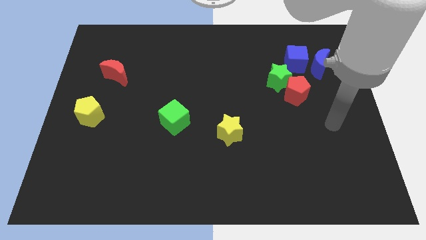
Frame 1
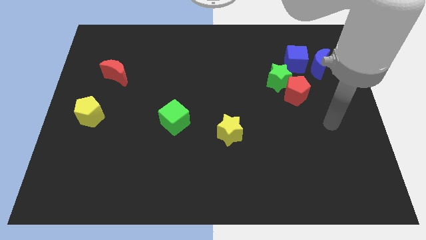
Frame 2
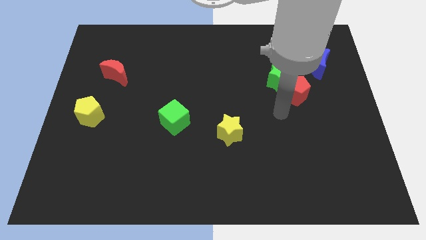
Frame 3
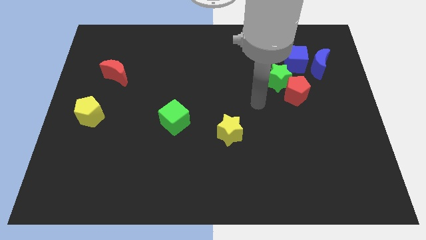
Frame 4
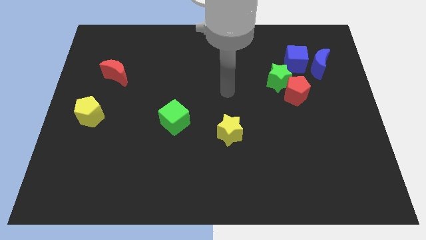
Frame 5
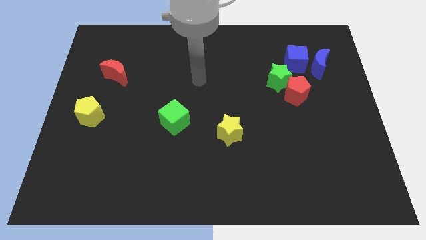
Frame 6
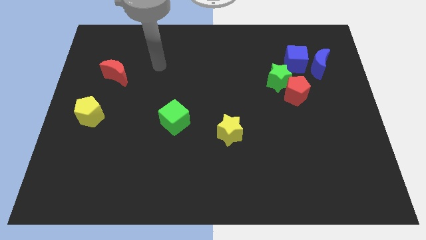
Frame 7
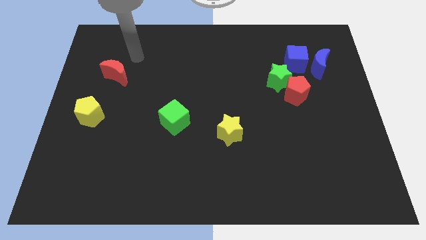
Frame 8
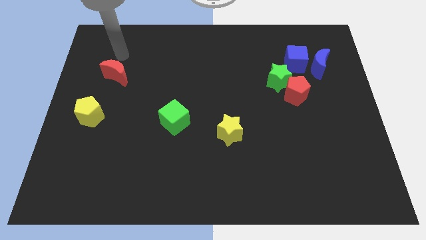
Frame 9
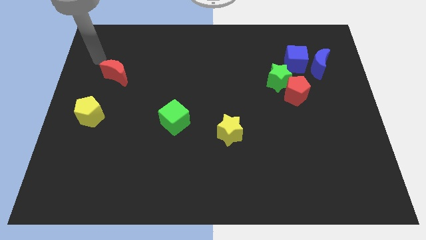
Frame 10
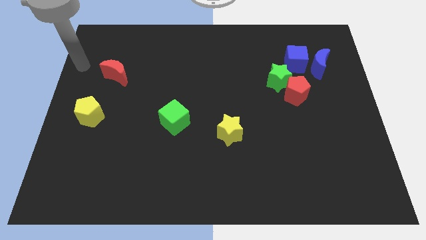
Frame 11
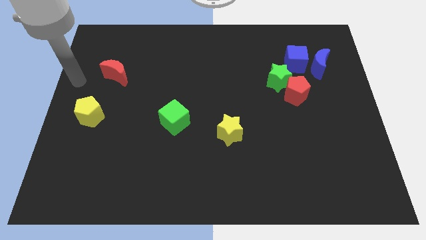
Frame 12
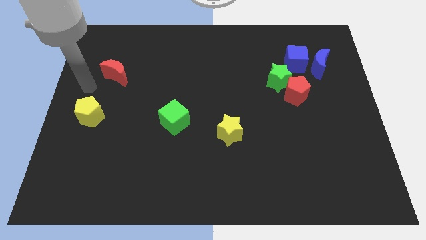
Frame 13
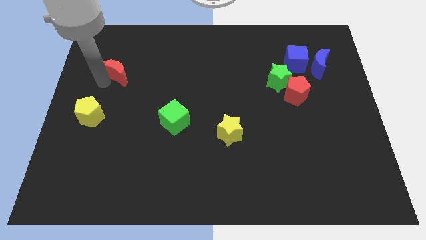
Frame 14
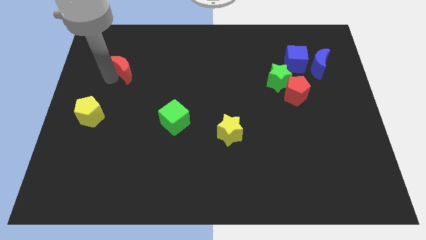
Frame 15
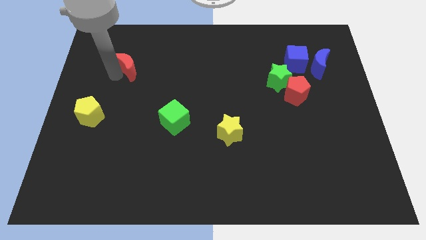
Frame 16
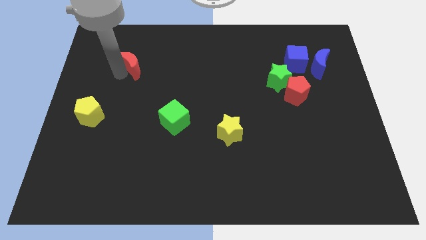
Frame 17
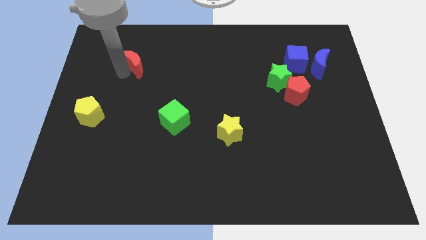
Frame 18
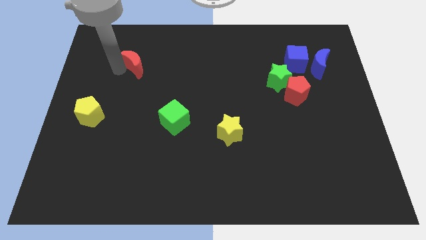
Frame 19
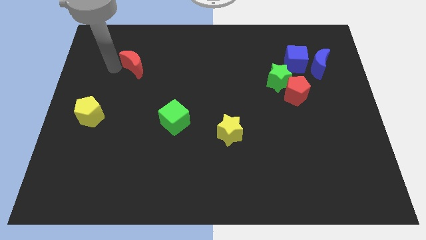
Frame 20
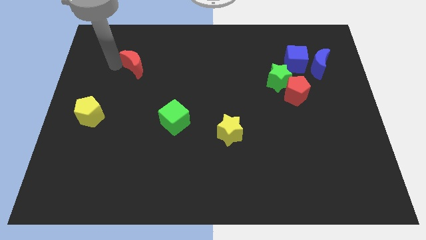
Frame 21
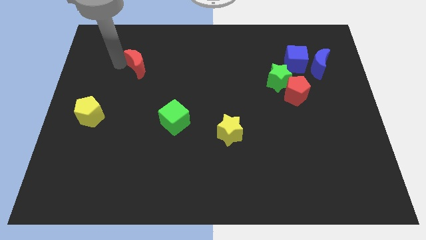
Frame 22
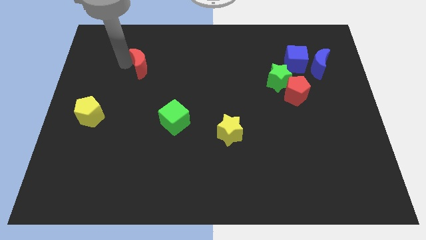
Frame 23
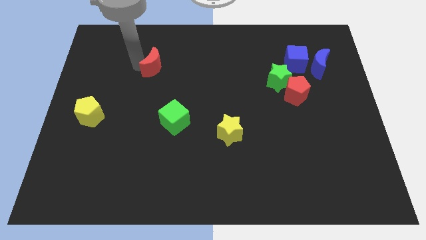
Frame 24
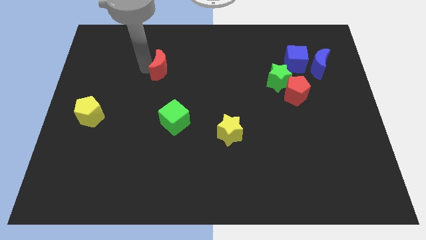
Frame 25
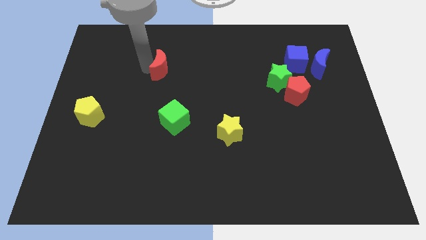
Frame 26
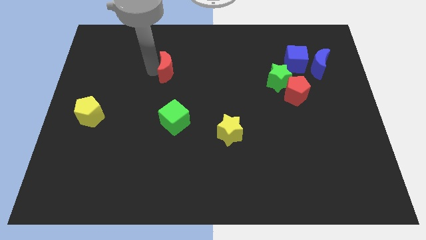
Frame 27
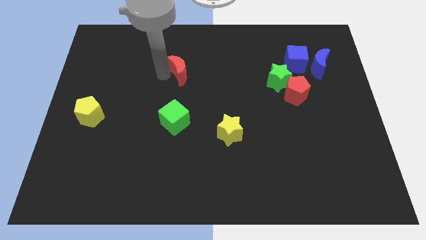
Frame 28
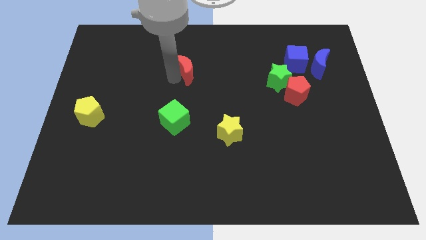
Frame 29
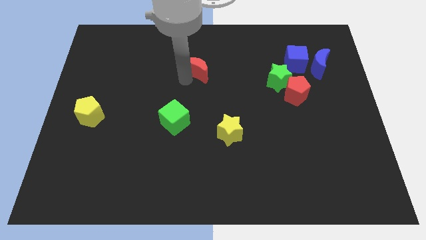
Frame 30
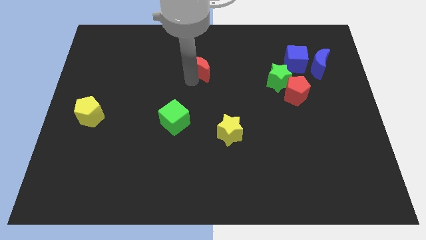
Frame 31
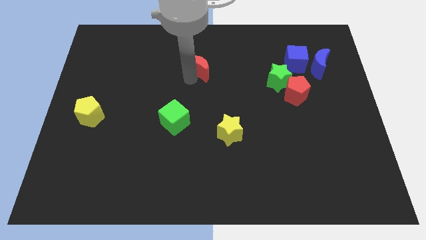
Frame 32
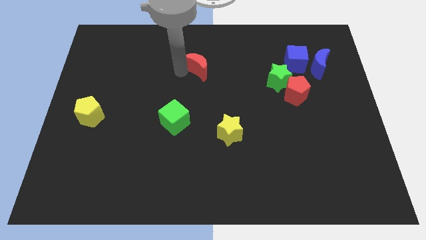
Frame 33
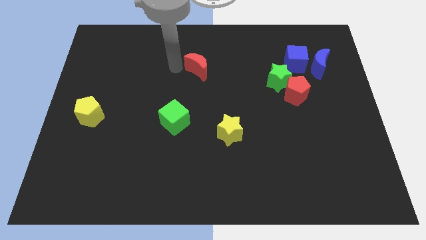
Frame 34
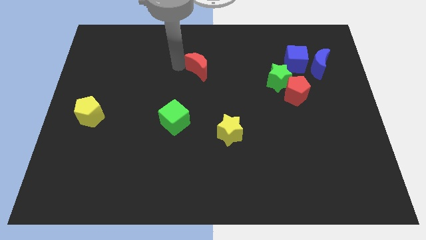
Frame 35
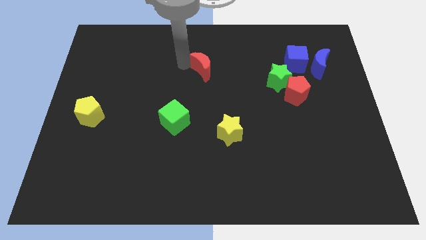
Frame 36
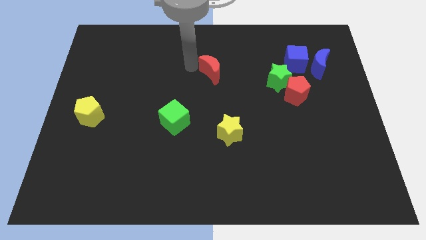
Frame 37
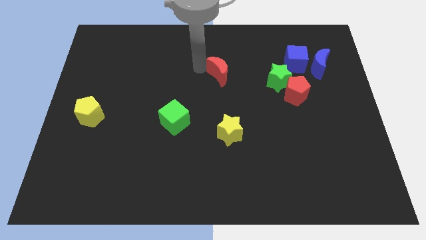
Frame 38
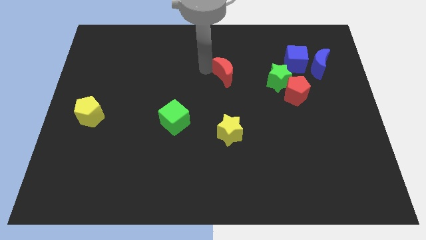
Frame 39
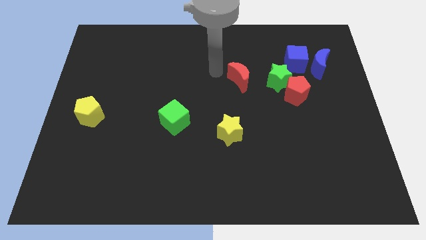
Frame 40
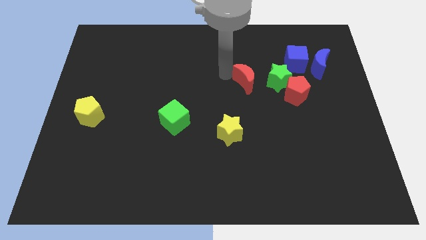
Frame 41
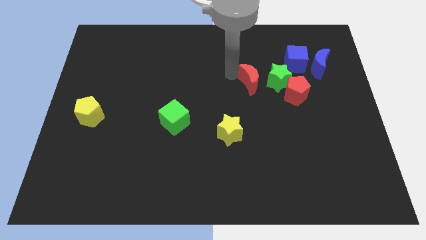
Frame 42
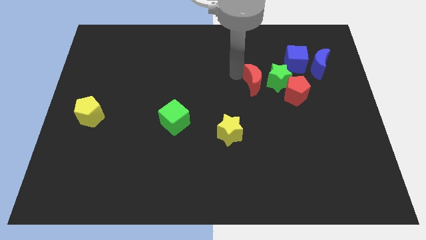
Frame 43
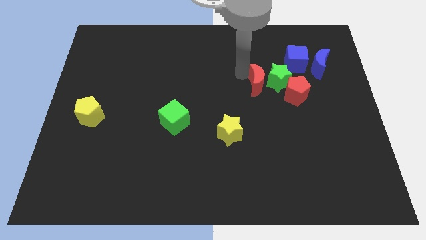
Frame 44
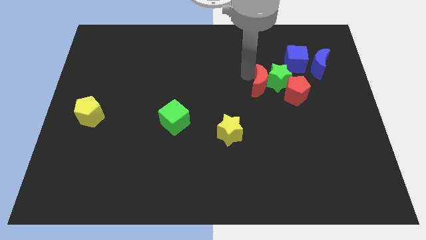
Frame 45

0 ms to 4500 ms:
move the red moon to the green star

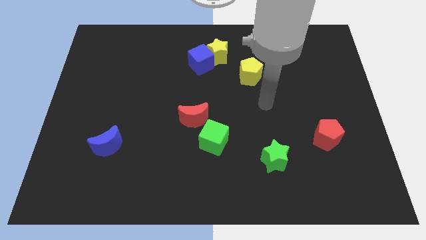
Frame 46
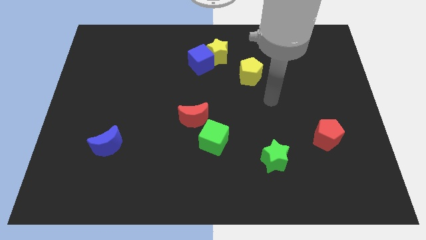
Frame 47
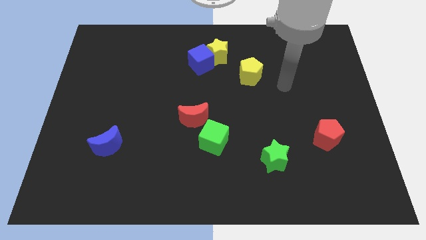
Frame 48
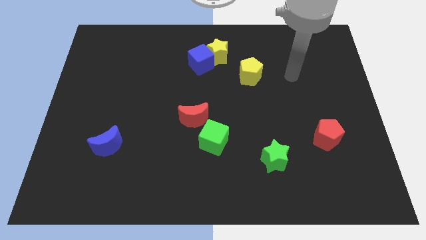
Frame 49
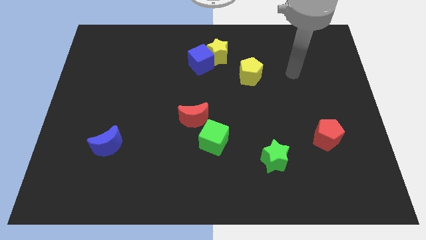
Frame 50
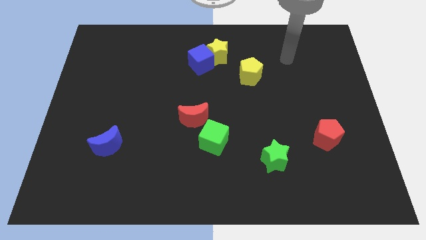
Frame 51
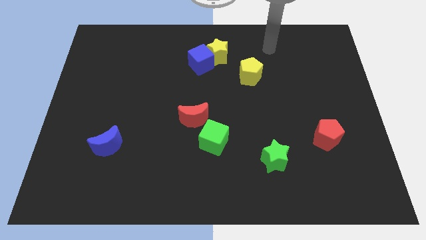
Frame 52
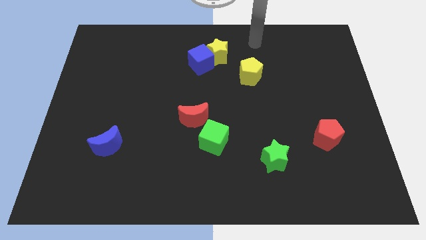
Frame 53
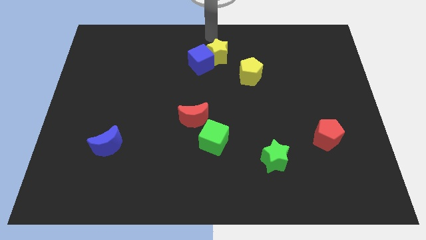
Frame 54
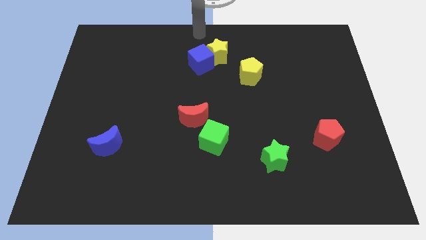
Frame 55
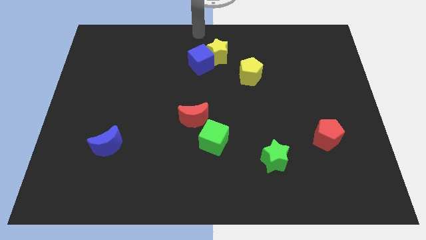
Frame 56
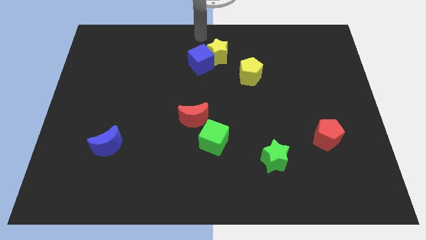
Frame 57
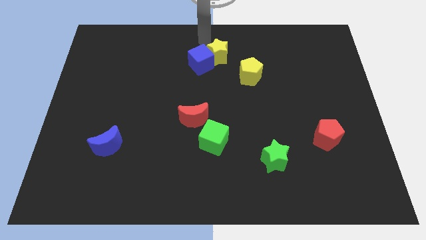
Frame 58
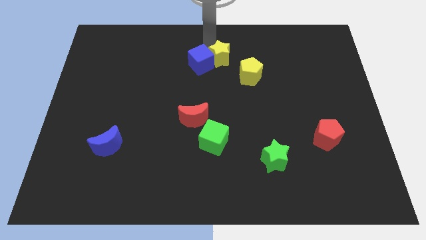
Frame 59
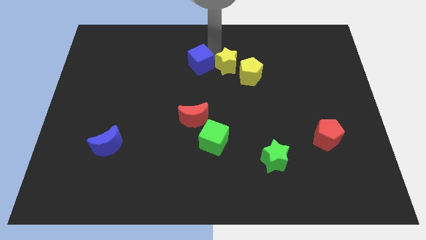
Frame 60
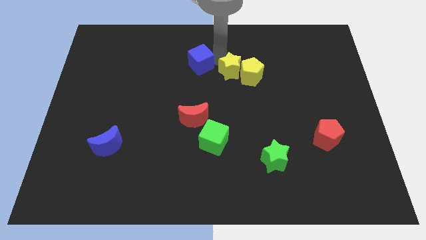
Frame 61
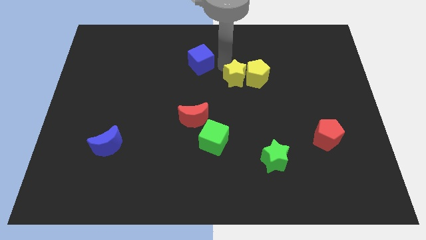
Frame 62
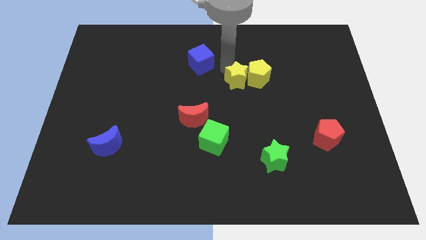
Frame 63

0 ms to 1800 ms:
slide the yellow star close to the yellow pentagon

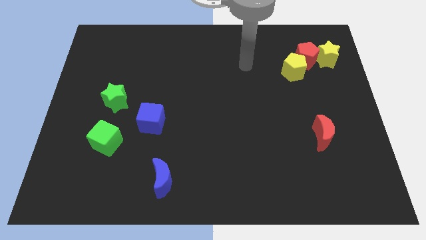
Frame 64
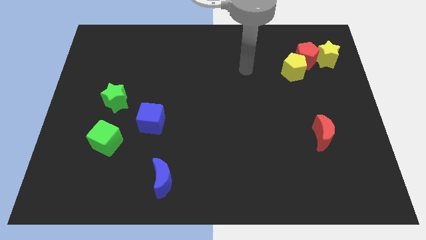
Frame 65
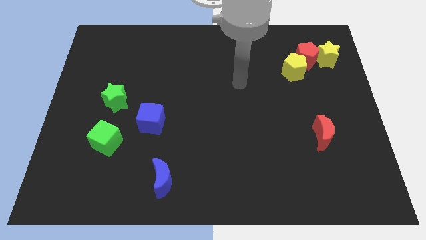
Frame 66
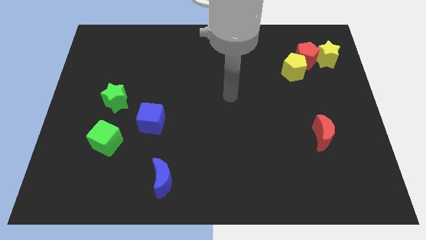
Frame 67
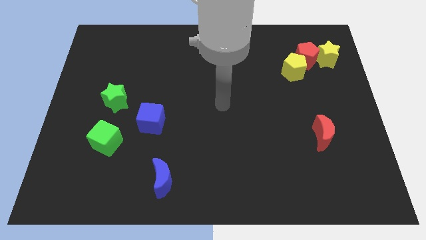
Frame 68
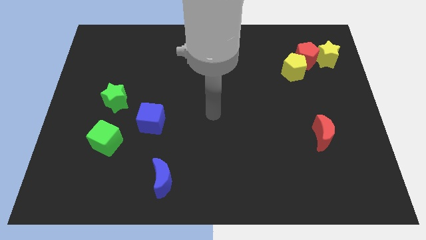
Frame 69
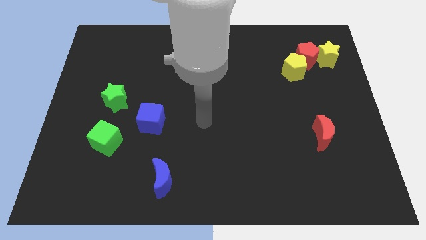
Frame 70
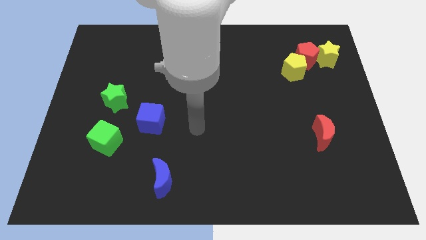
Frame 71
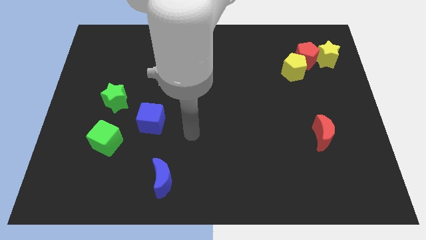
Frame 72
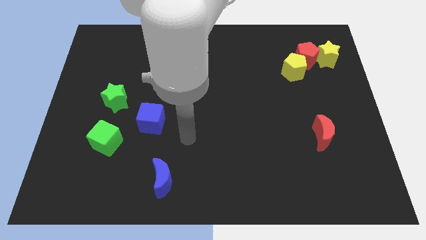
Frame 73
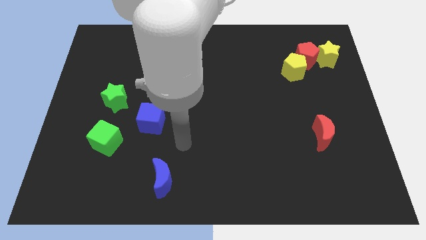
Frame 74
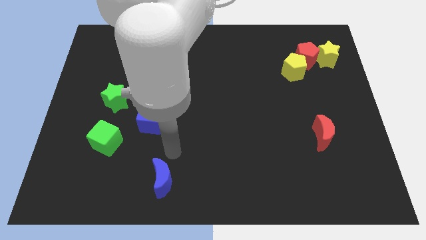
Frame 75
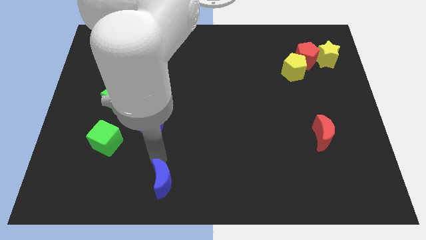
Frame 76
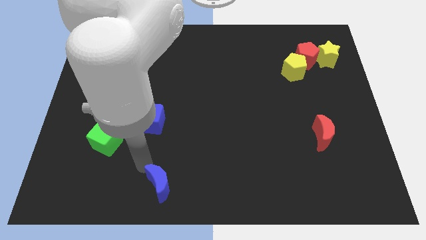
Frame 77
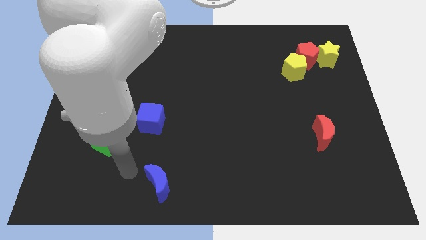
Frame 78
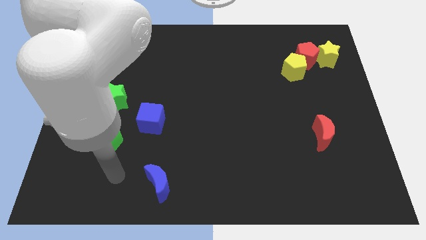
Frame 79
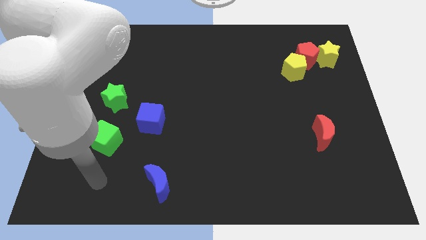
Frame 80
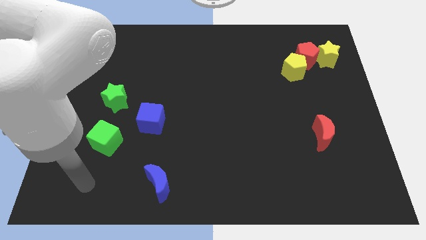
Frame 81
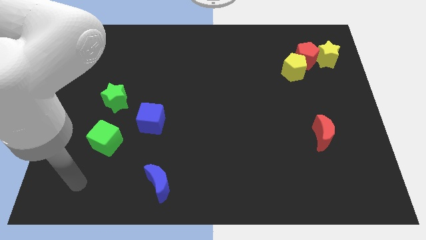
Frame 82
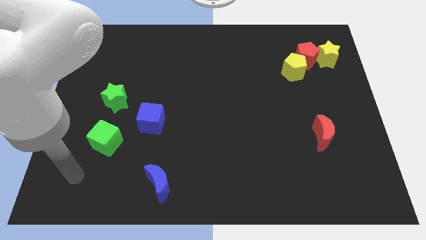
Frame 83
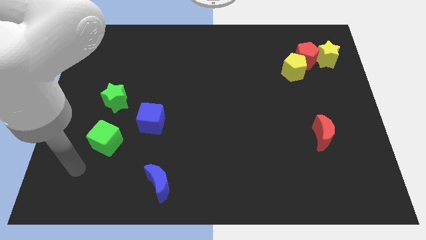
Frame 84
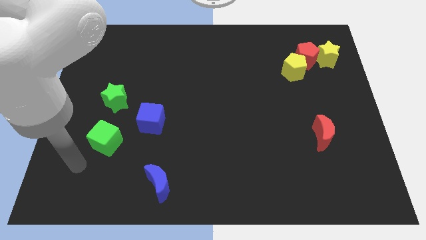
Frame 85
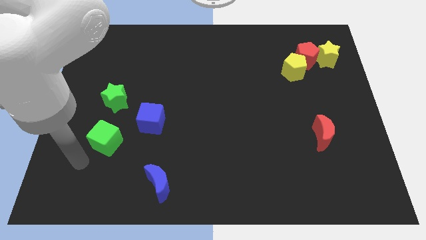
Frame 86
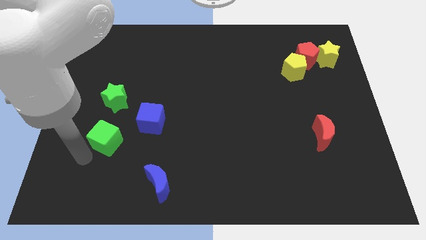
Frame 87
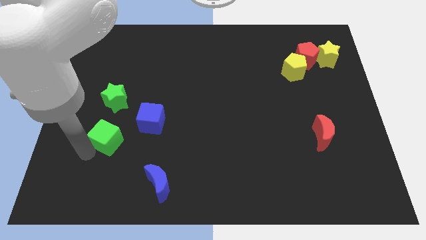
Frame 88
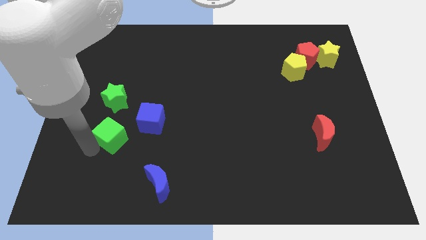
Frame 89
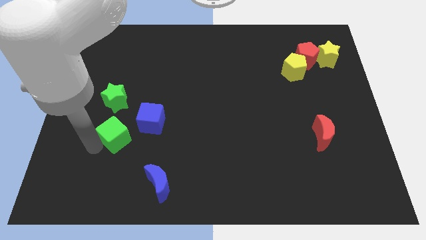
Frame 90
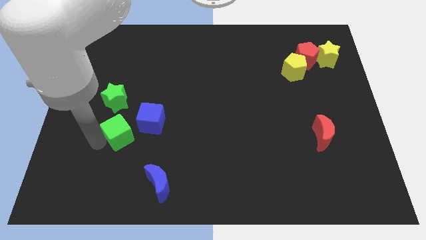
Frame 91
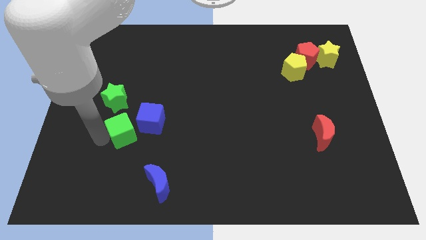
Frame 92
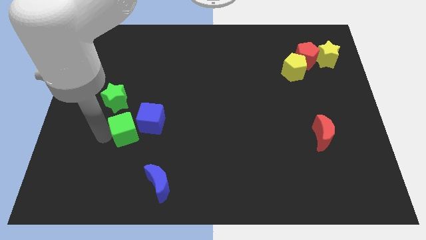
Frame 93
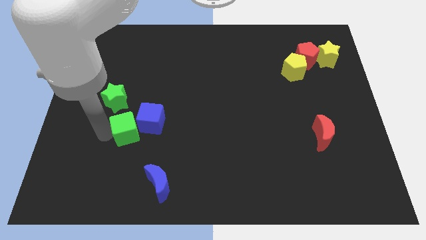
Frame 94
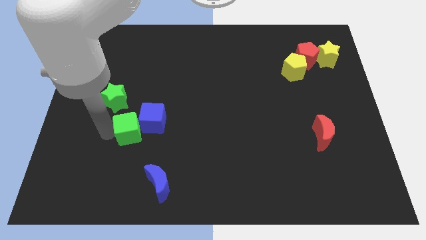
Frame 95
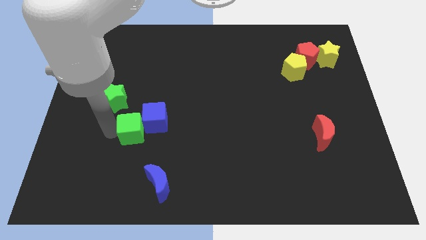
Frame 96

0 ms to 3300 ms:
move the green cube towards the blue cube
